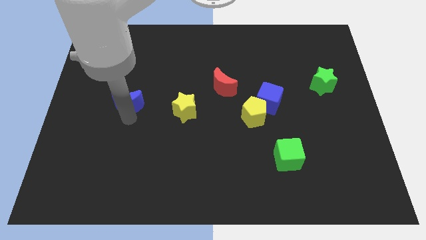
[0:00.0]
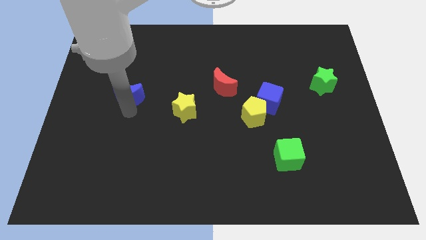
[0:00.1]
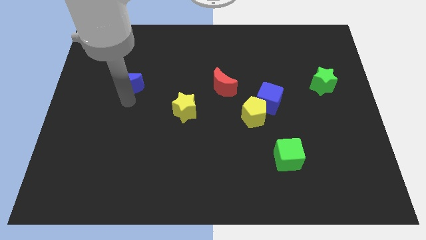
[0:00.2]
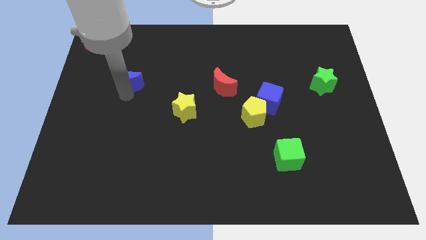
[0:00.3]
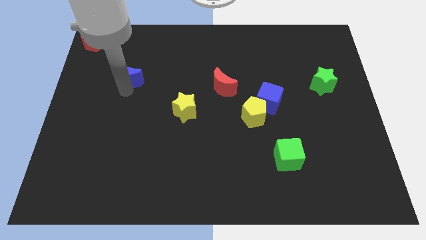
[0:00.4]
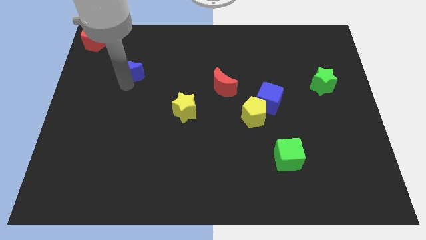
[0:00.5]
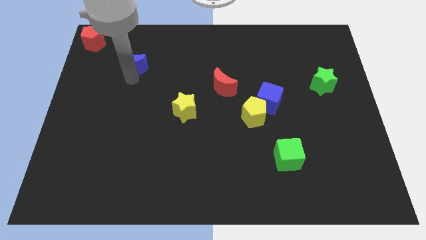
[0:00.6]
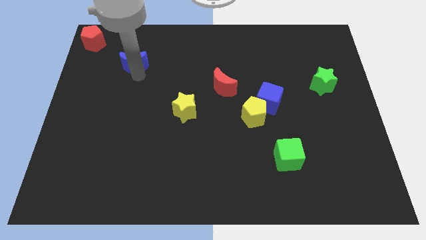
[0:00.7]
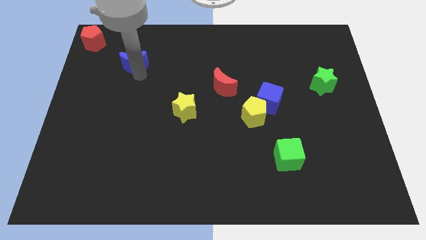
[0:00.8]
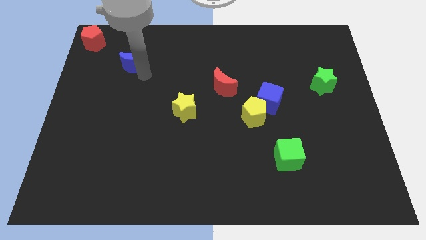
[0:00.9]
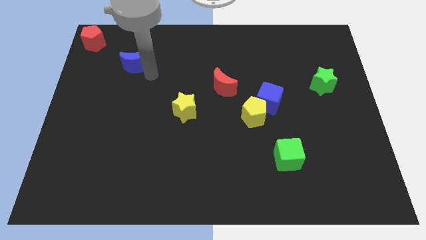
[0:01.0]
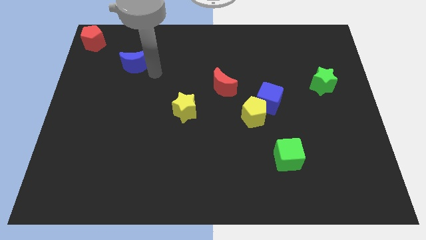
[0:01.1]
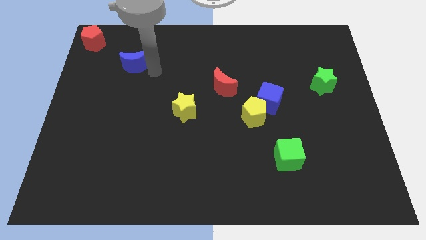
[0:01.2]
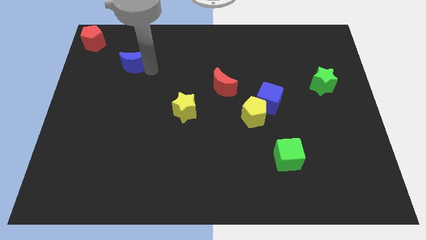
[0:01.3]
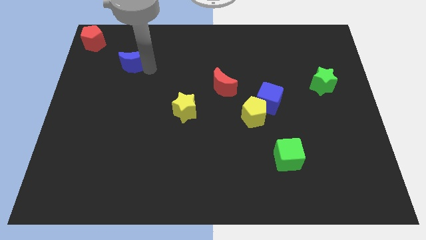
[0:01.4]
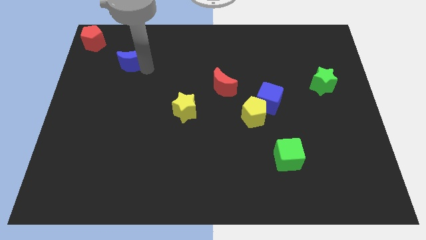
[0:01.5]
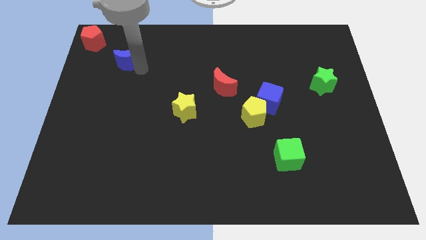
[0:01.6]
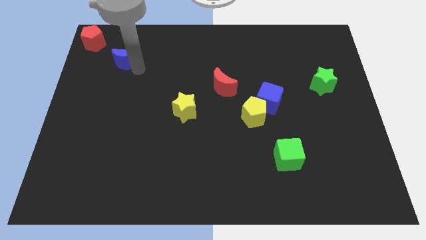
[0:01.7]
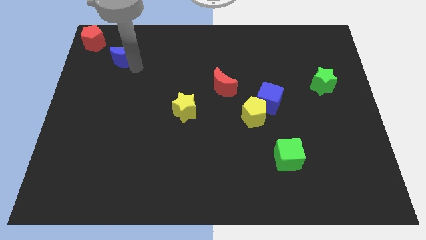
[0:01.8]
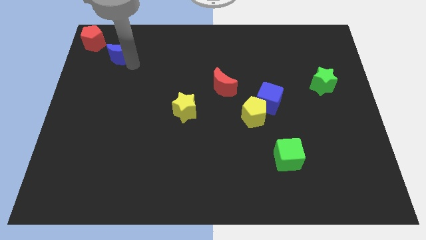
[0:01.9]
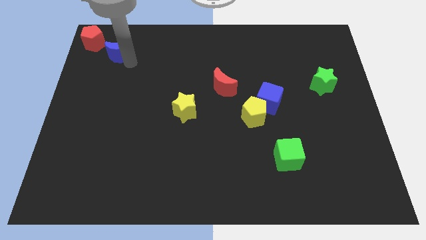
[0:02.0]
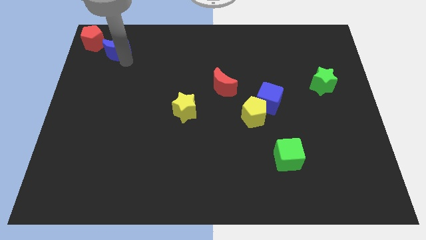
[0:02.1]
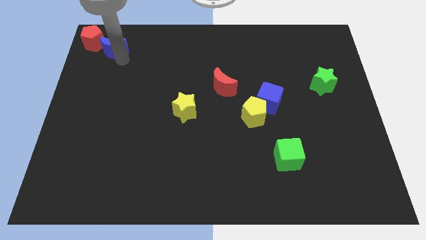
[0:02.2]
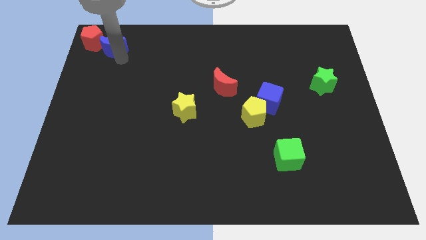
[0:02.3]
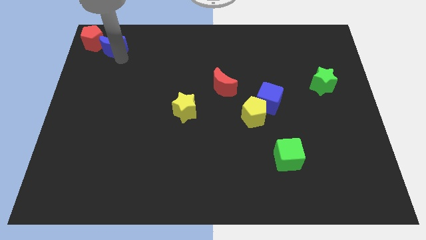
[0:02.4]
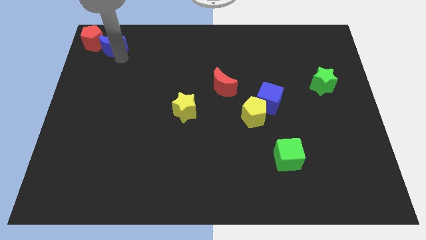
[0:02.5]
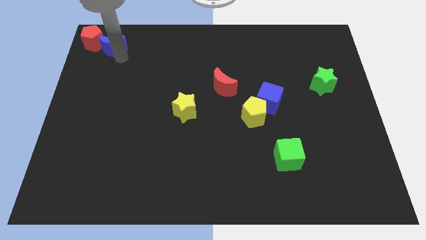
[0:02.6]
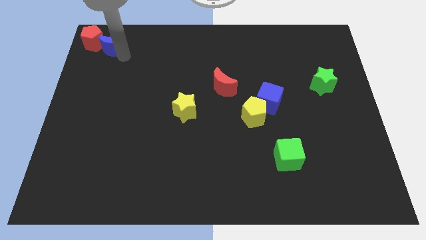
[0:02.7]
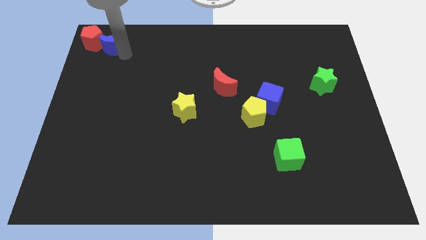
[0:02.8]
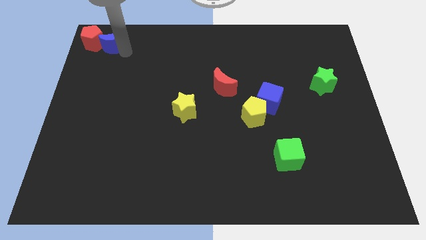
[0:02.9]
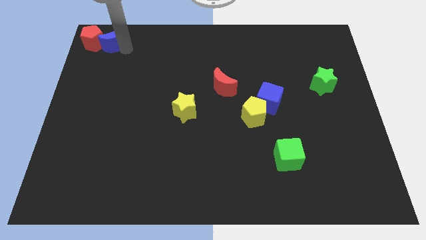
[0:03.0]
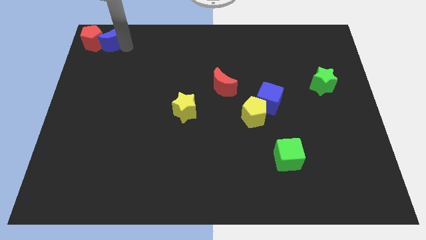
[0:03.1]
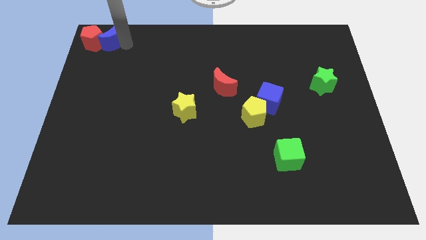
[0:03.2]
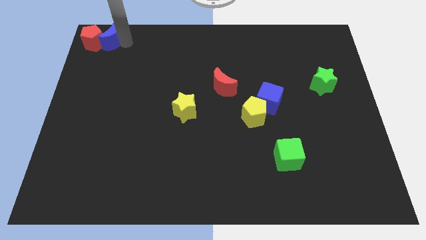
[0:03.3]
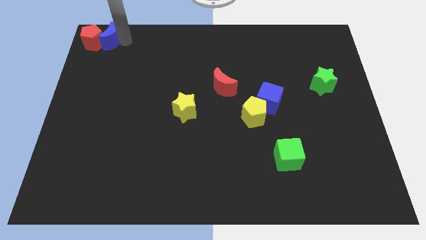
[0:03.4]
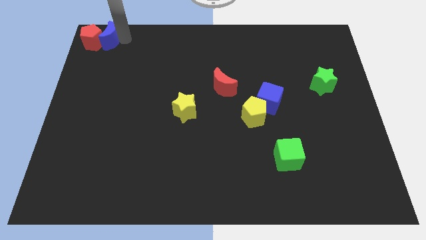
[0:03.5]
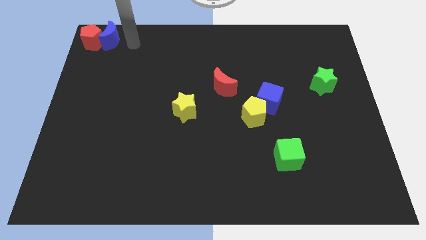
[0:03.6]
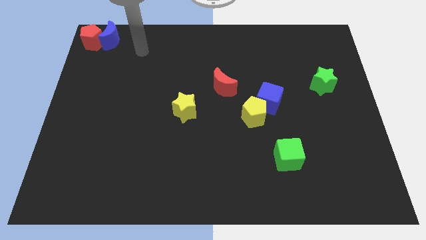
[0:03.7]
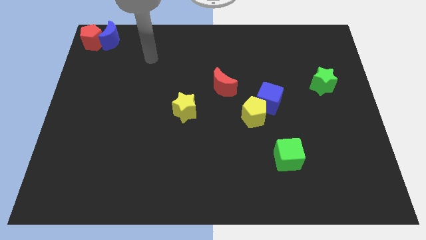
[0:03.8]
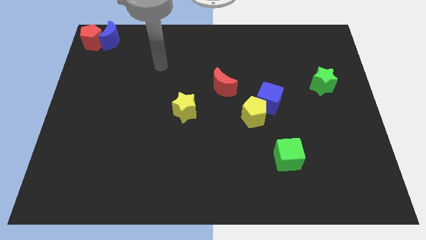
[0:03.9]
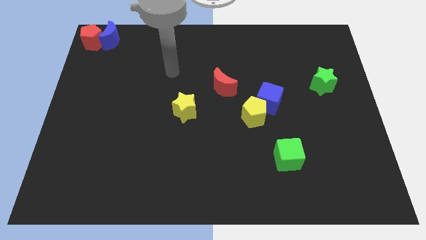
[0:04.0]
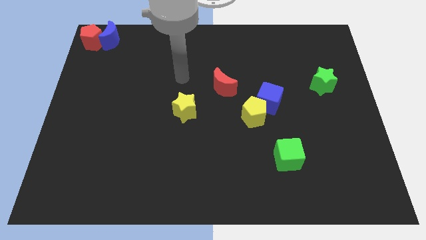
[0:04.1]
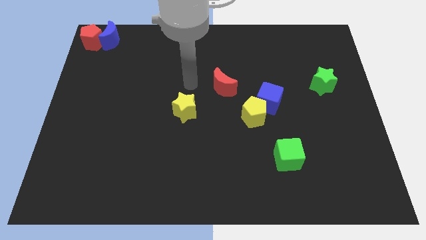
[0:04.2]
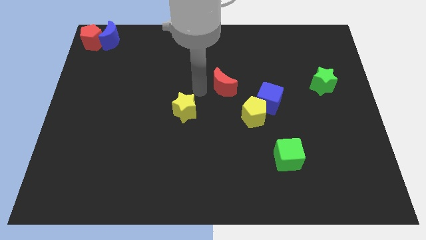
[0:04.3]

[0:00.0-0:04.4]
move blue moon to the top left corner of the board

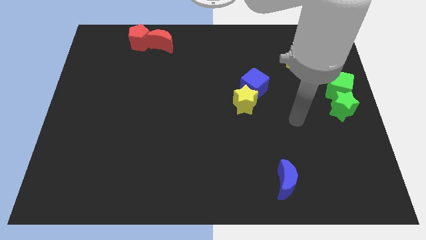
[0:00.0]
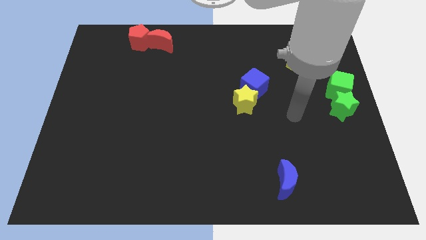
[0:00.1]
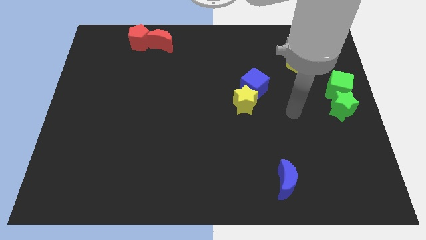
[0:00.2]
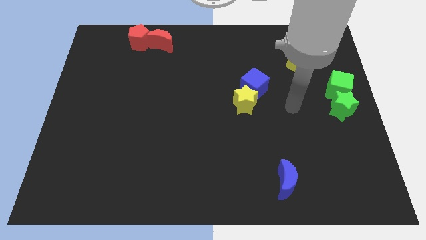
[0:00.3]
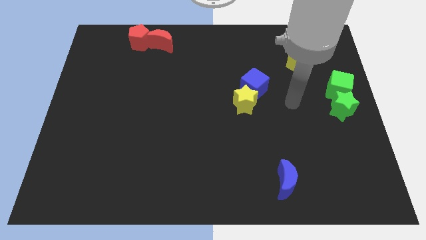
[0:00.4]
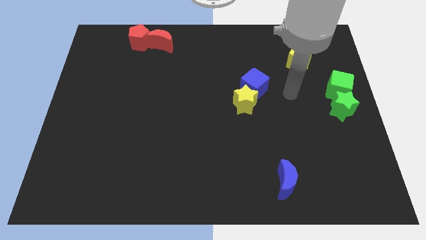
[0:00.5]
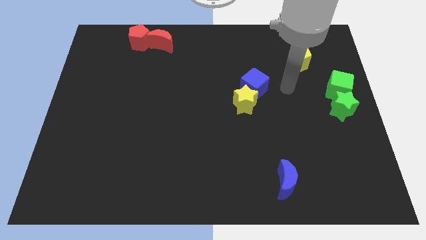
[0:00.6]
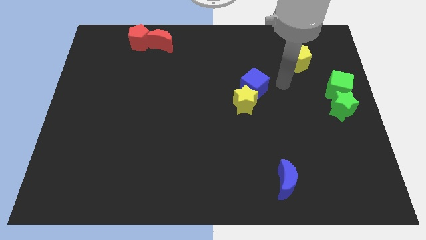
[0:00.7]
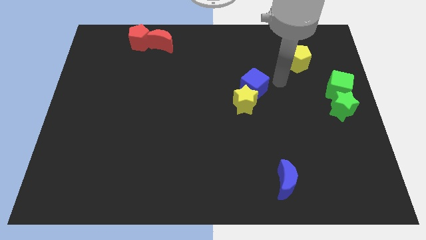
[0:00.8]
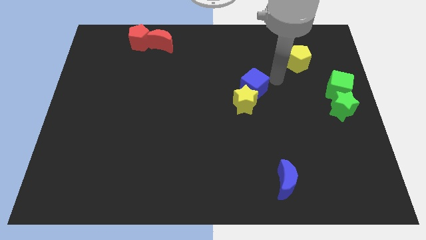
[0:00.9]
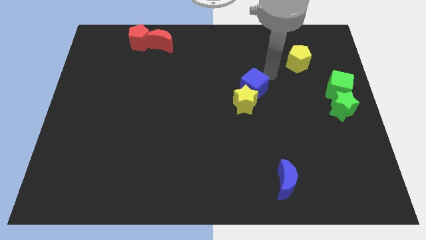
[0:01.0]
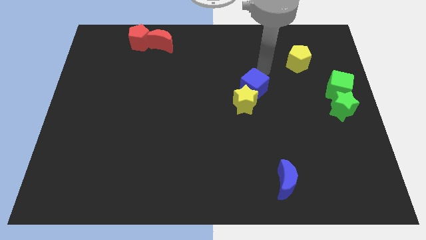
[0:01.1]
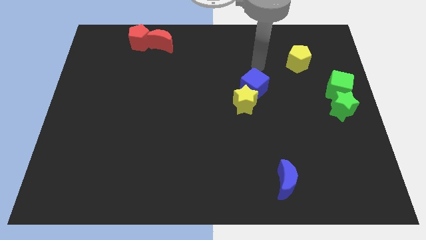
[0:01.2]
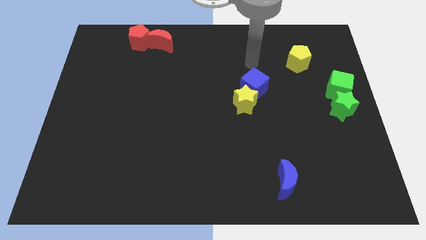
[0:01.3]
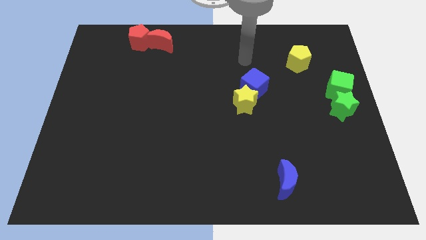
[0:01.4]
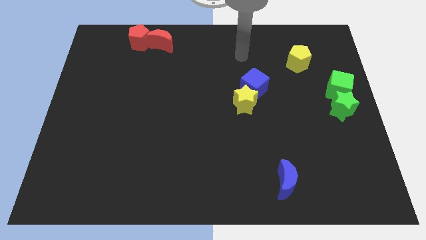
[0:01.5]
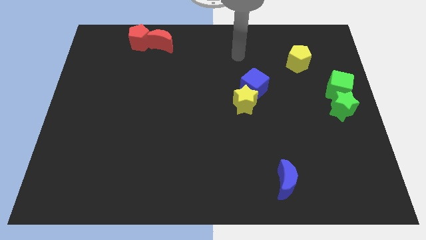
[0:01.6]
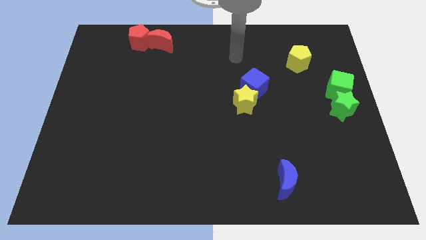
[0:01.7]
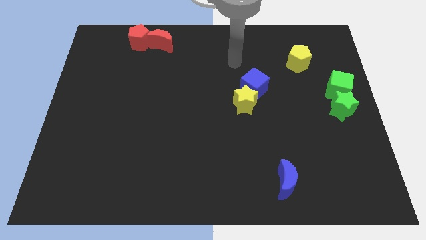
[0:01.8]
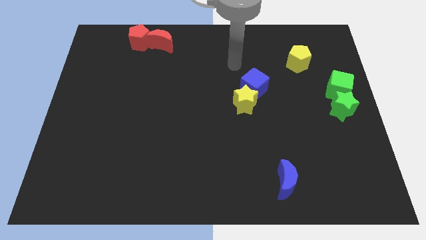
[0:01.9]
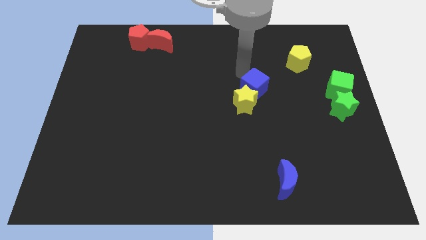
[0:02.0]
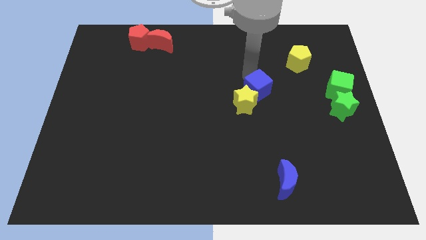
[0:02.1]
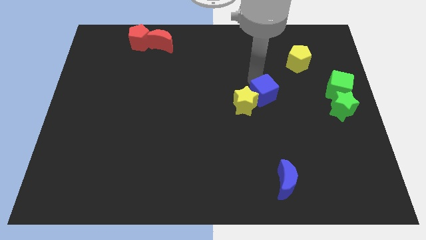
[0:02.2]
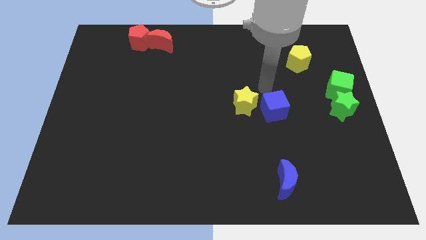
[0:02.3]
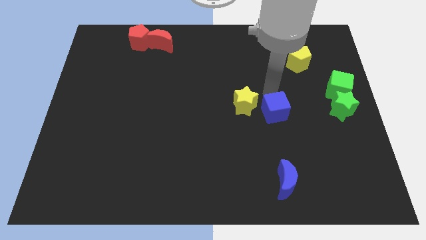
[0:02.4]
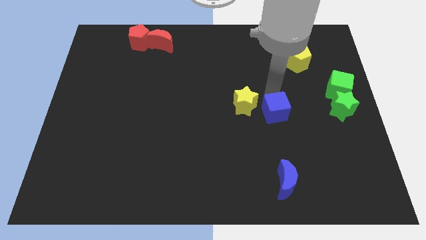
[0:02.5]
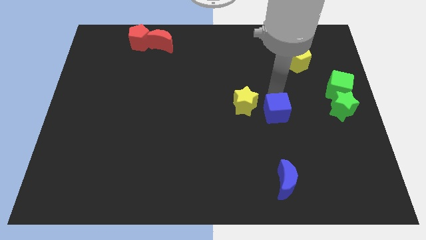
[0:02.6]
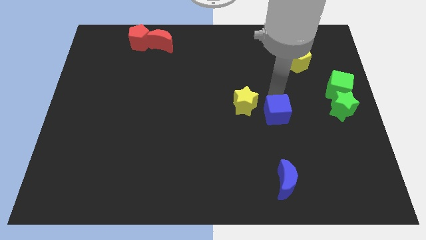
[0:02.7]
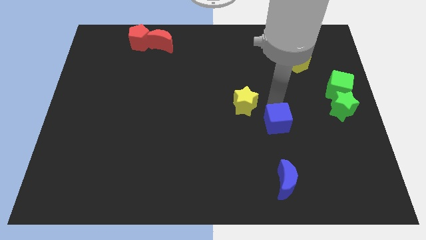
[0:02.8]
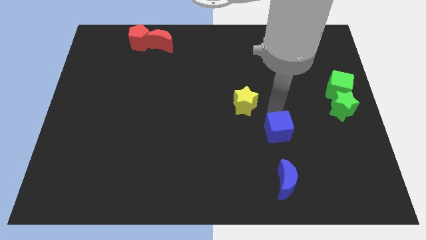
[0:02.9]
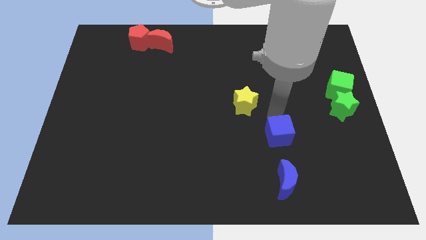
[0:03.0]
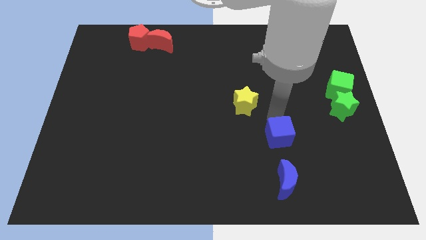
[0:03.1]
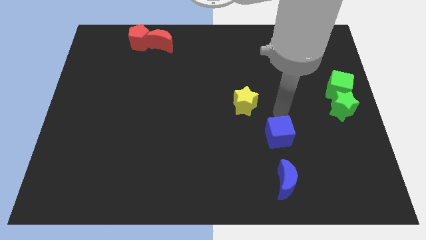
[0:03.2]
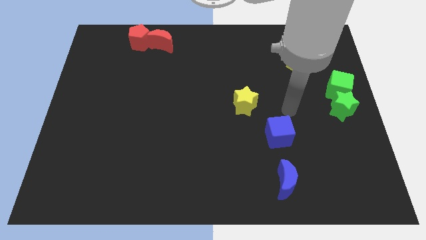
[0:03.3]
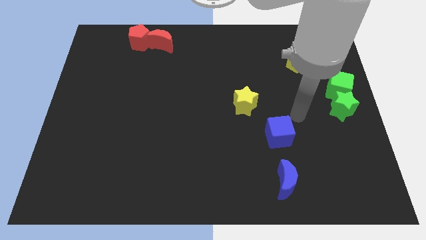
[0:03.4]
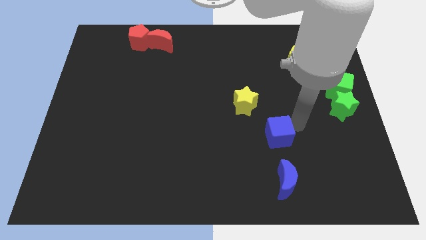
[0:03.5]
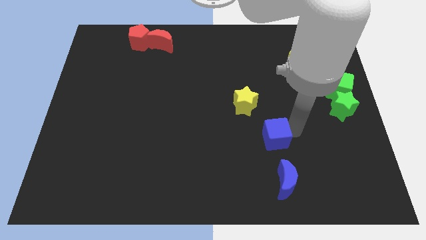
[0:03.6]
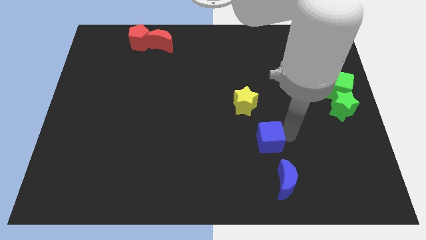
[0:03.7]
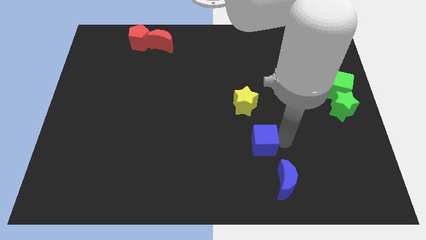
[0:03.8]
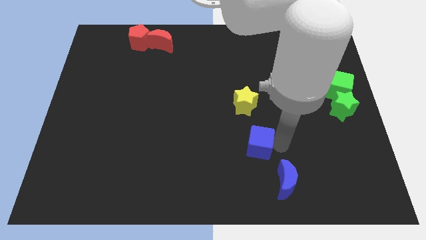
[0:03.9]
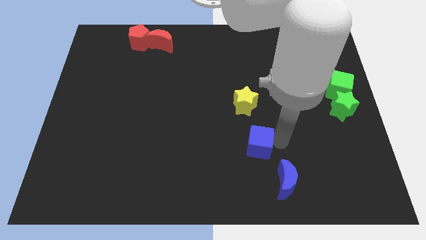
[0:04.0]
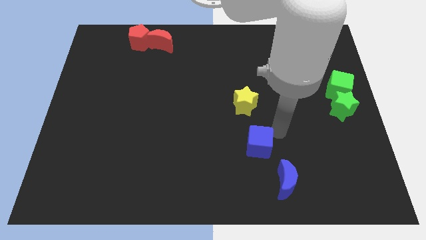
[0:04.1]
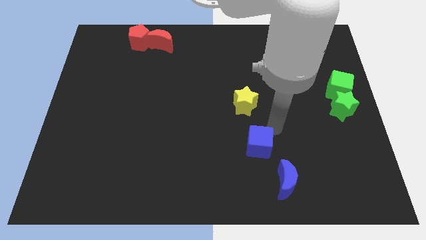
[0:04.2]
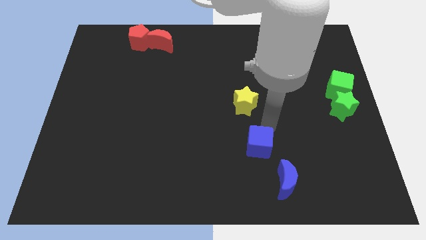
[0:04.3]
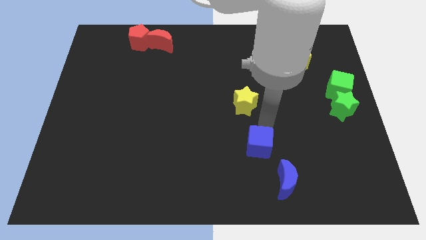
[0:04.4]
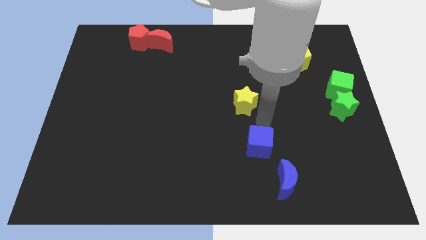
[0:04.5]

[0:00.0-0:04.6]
place the blue cube in between the blue moon and yellow star
